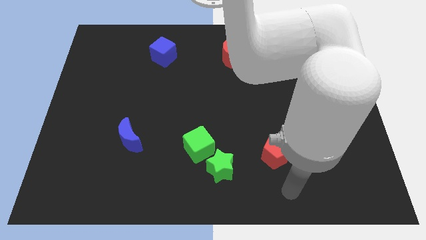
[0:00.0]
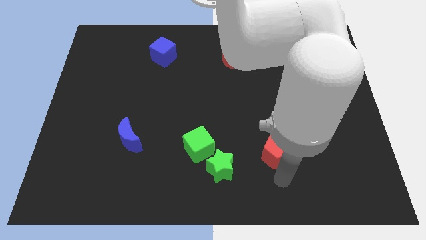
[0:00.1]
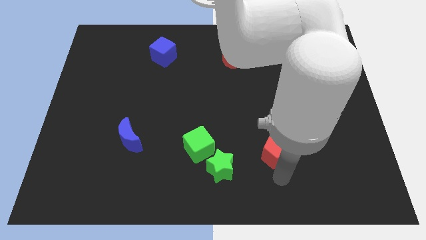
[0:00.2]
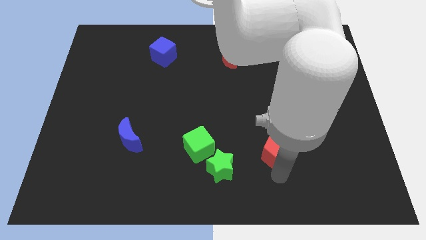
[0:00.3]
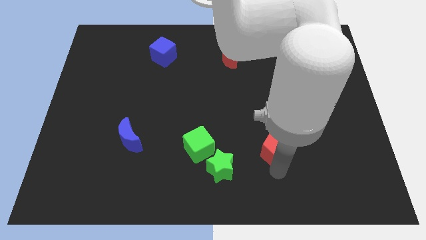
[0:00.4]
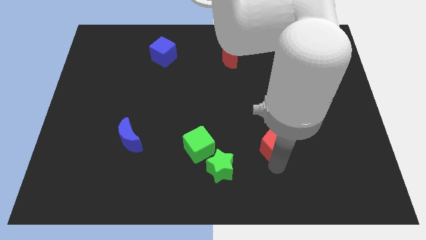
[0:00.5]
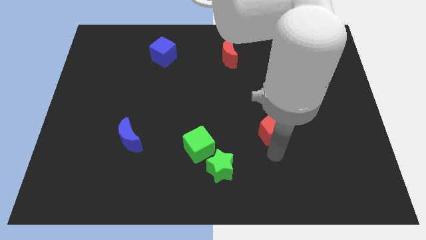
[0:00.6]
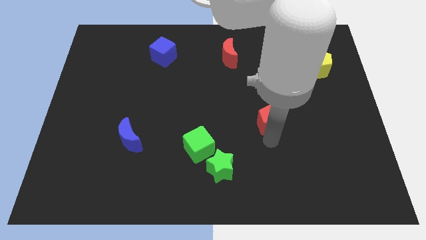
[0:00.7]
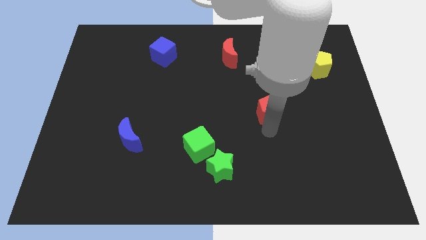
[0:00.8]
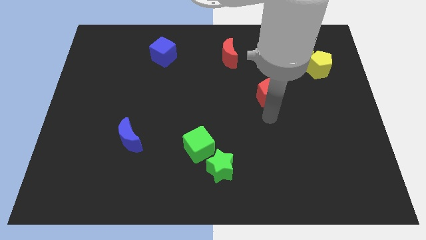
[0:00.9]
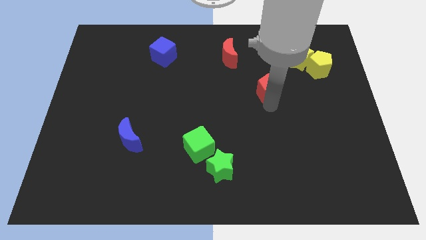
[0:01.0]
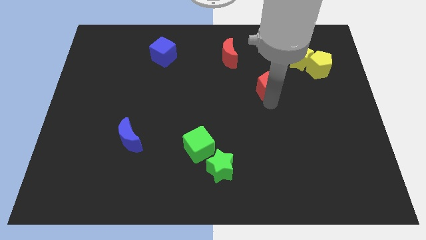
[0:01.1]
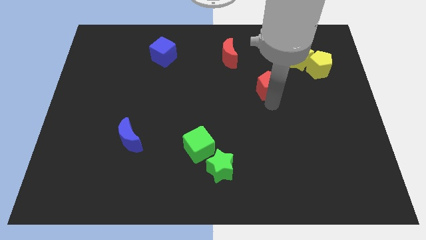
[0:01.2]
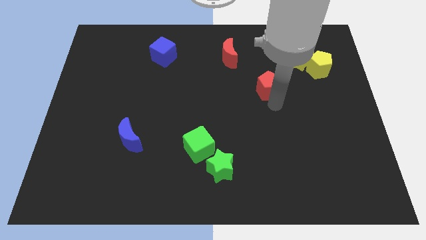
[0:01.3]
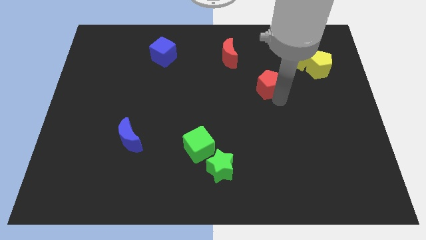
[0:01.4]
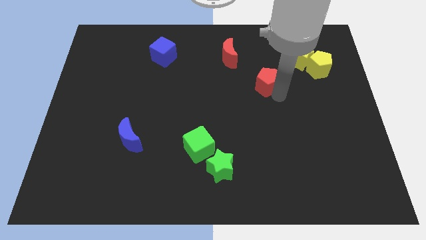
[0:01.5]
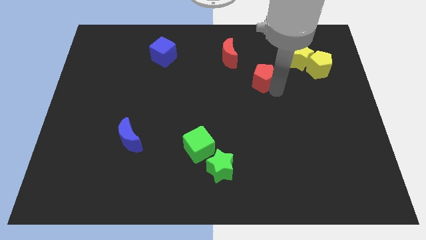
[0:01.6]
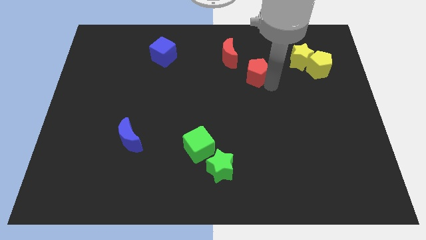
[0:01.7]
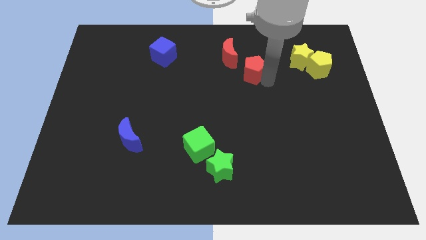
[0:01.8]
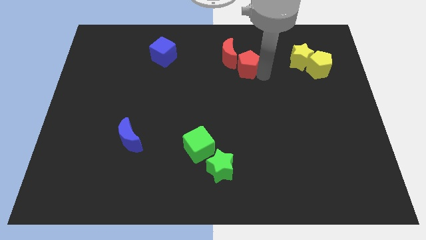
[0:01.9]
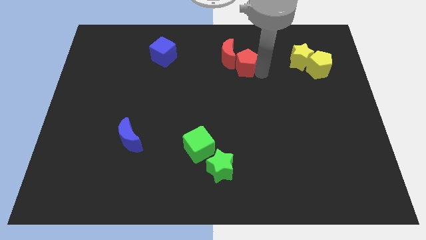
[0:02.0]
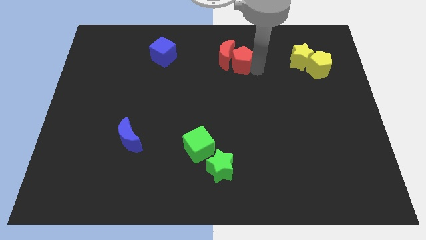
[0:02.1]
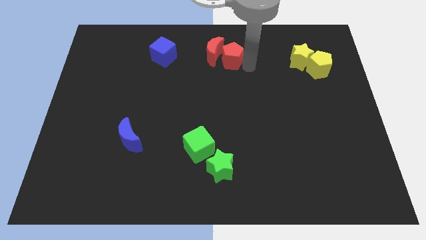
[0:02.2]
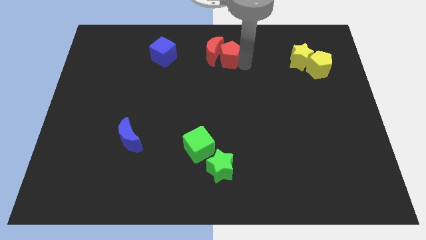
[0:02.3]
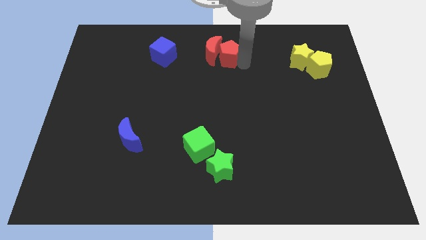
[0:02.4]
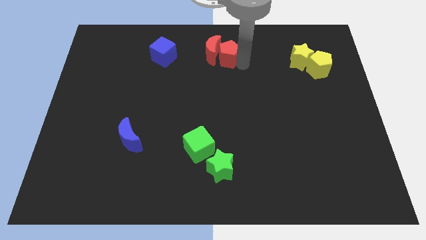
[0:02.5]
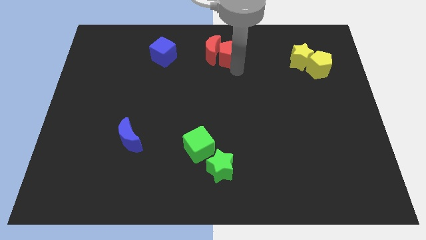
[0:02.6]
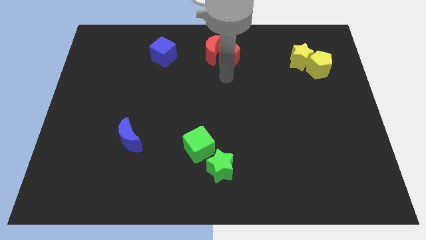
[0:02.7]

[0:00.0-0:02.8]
push the red pentagon into red moon

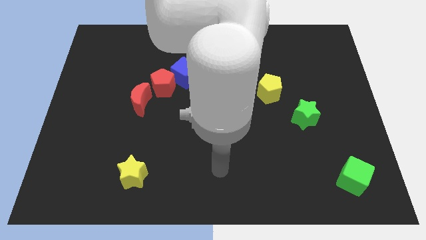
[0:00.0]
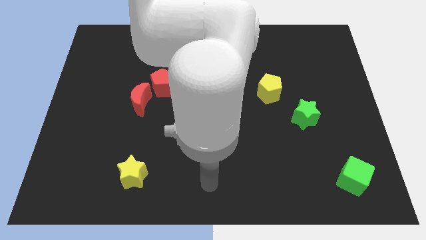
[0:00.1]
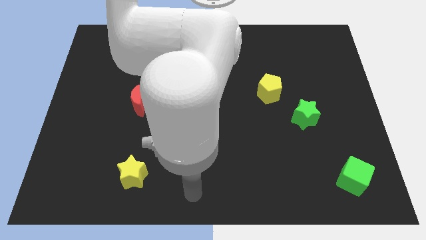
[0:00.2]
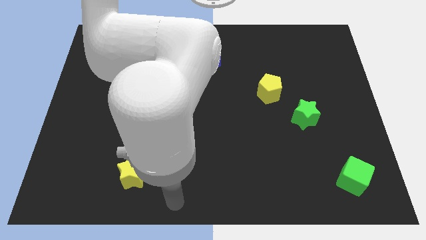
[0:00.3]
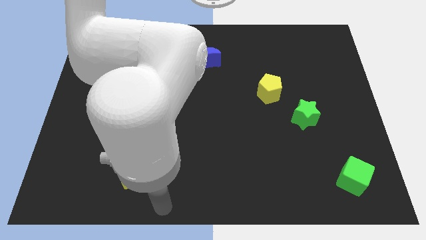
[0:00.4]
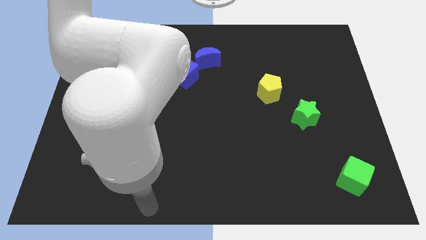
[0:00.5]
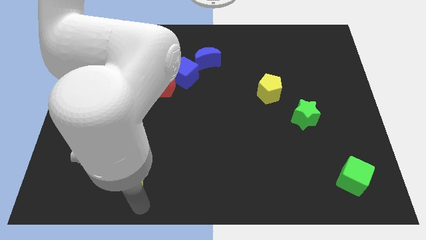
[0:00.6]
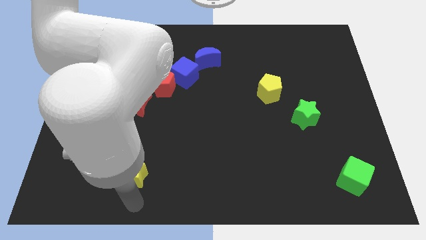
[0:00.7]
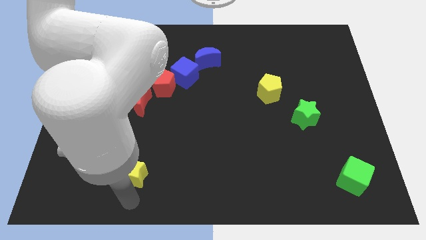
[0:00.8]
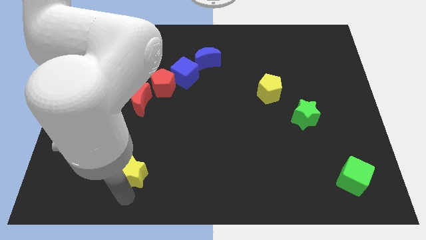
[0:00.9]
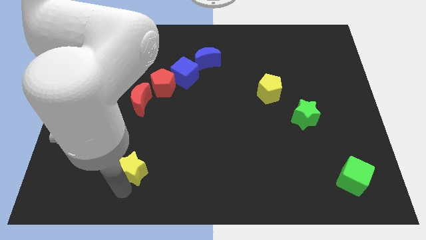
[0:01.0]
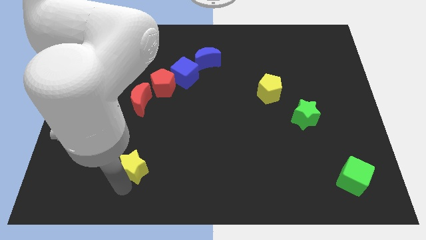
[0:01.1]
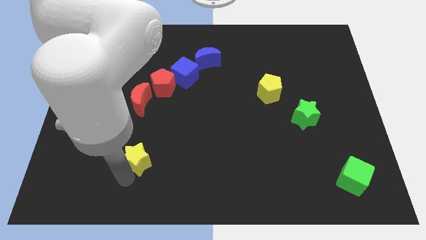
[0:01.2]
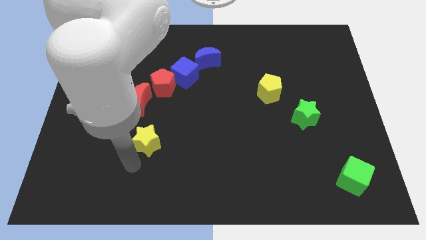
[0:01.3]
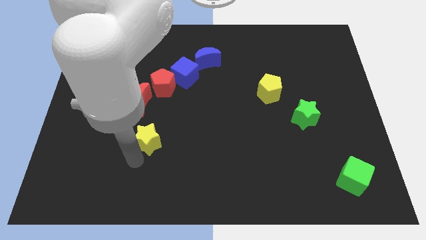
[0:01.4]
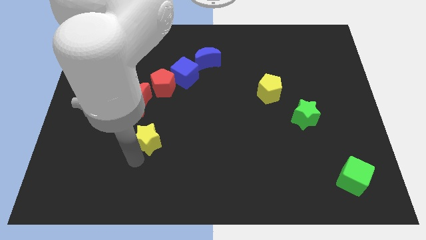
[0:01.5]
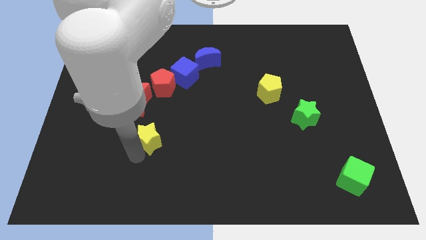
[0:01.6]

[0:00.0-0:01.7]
place the yellow star down to the red pentagon

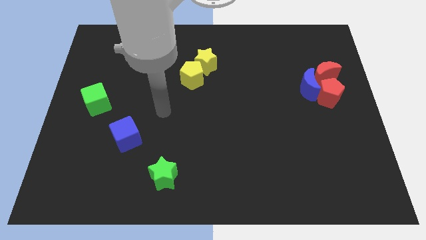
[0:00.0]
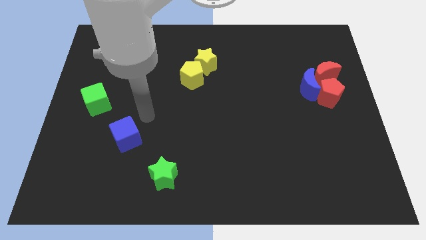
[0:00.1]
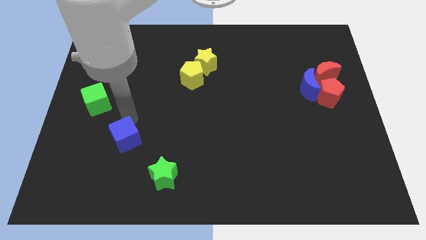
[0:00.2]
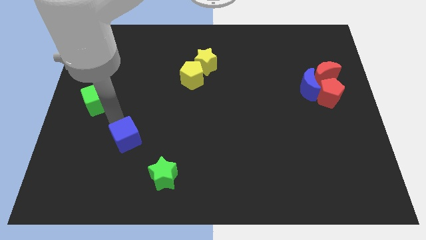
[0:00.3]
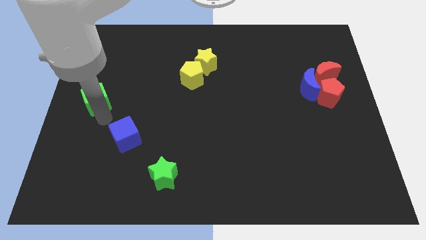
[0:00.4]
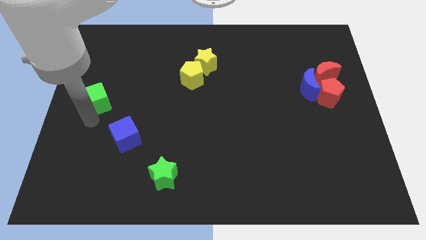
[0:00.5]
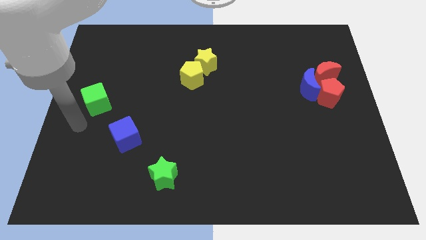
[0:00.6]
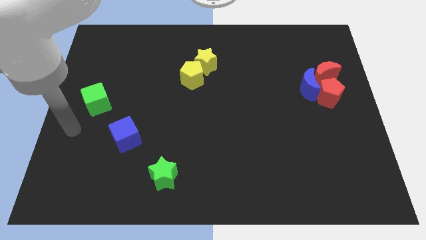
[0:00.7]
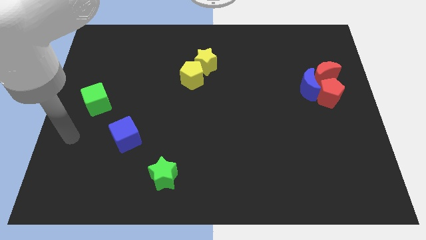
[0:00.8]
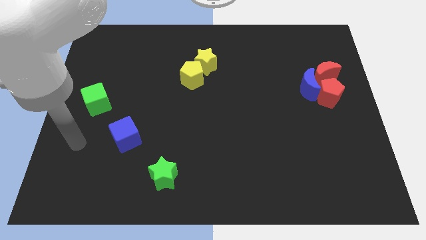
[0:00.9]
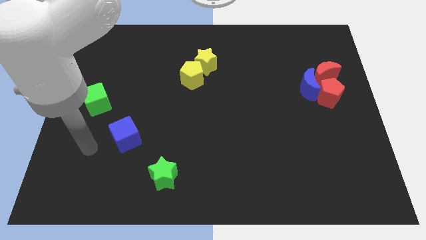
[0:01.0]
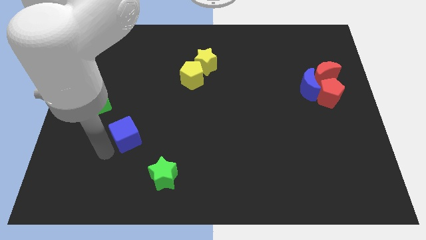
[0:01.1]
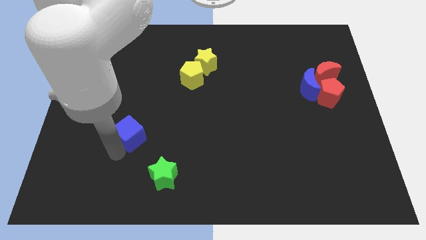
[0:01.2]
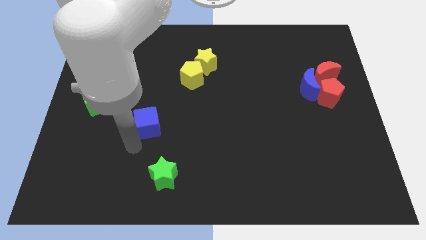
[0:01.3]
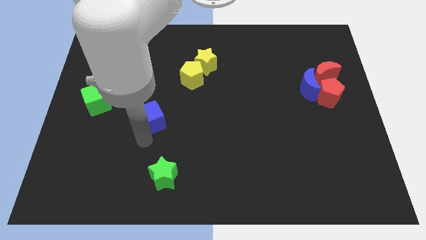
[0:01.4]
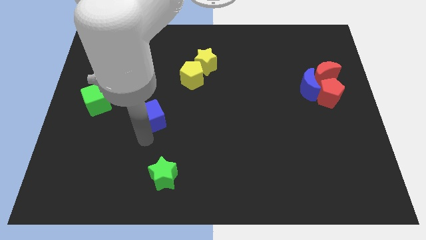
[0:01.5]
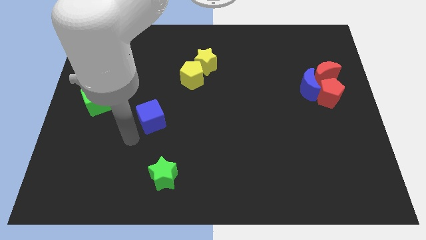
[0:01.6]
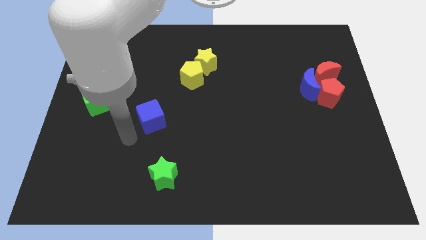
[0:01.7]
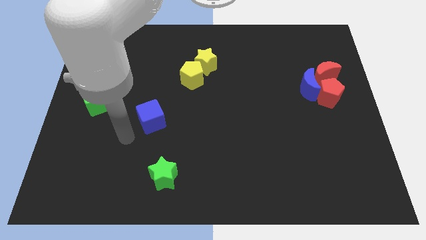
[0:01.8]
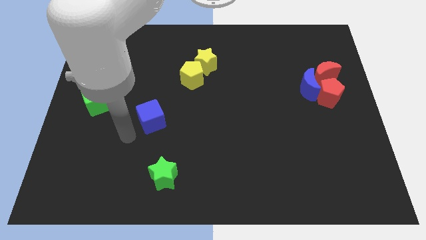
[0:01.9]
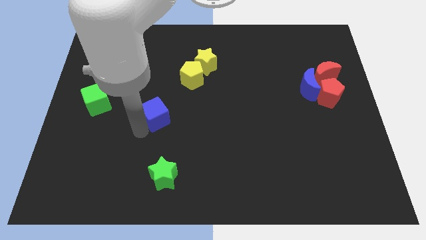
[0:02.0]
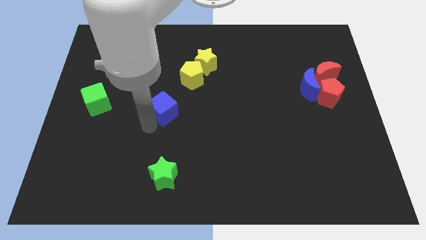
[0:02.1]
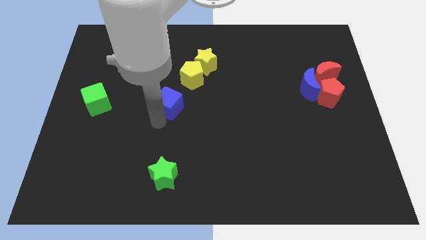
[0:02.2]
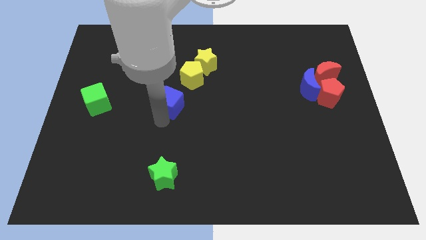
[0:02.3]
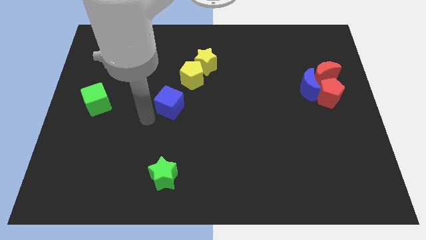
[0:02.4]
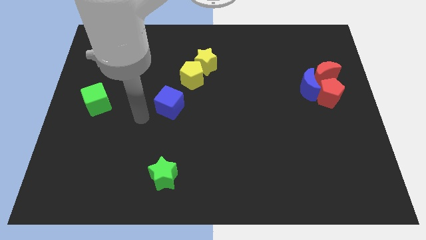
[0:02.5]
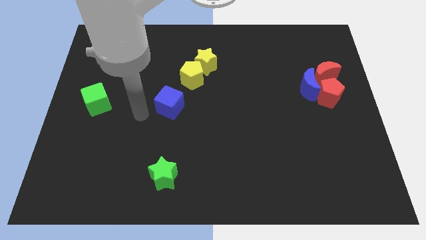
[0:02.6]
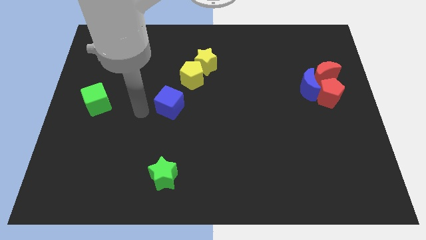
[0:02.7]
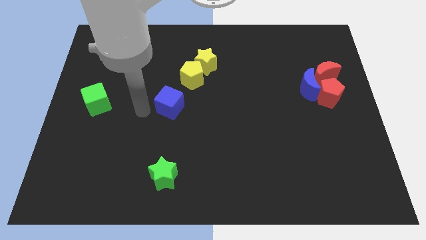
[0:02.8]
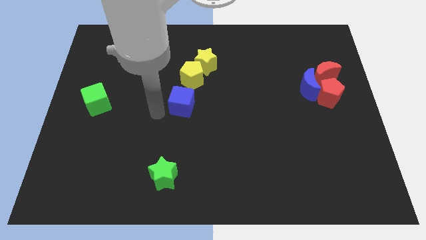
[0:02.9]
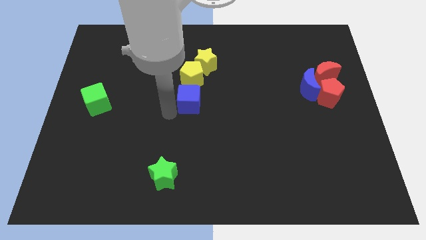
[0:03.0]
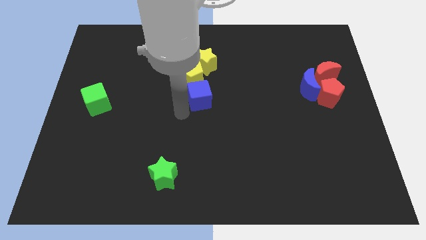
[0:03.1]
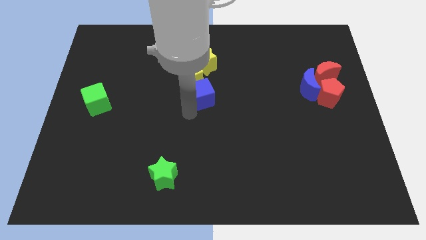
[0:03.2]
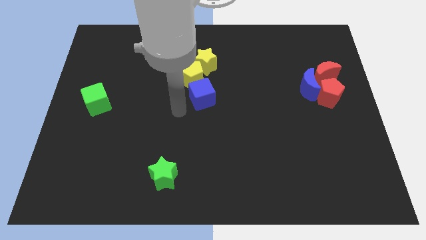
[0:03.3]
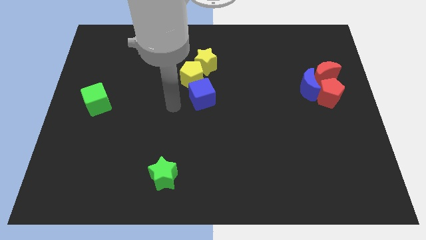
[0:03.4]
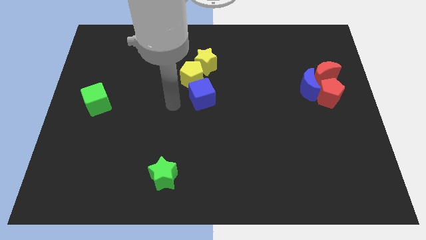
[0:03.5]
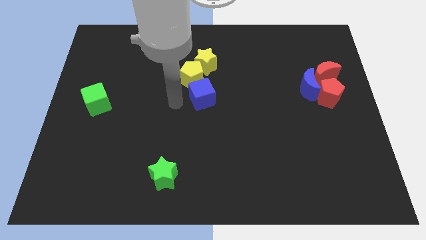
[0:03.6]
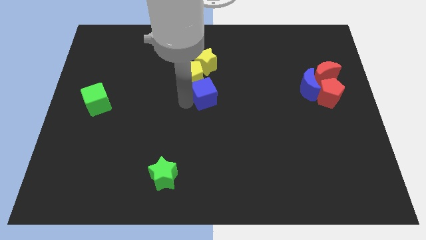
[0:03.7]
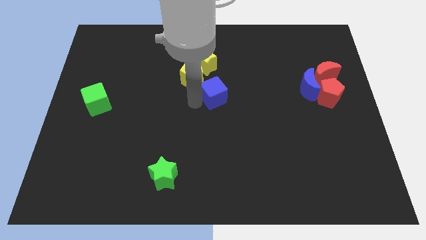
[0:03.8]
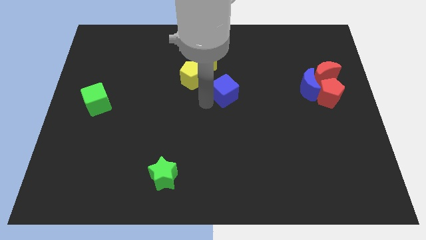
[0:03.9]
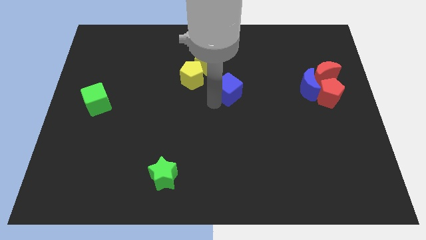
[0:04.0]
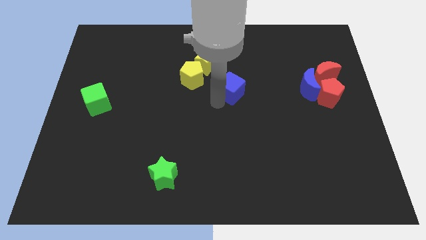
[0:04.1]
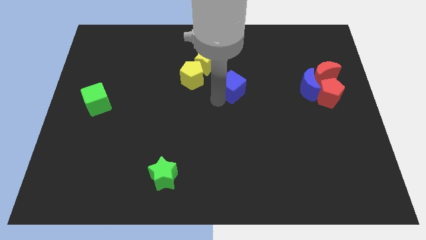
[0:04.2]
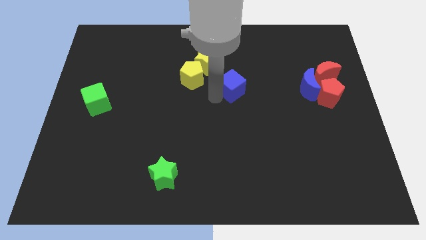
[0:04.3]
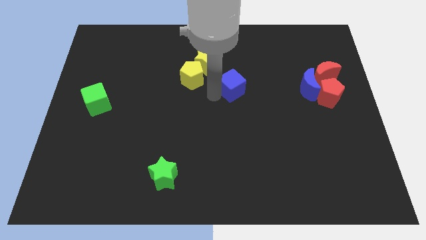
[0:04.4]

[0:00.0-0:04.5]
push the blue cube to the left of the blue crescent
